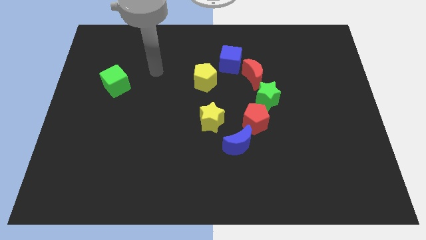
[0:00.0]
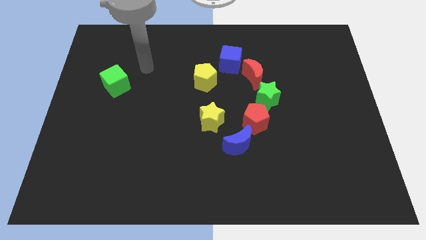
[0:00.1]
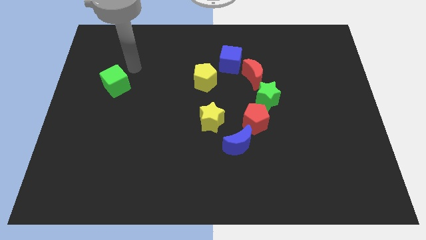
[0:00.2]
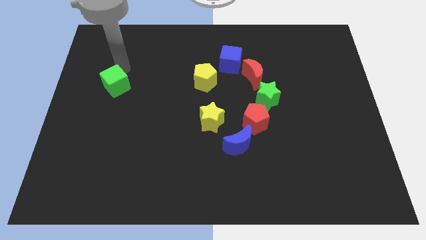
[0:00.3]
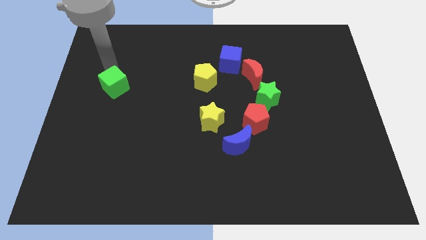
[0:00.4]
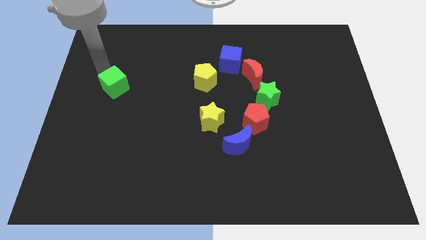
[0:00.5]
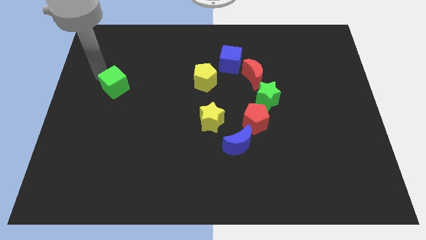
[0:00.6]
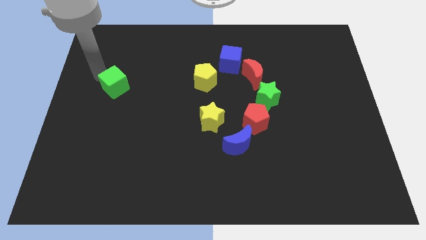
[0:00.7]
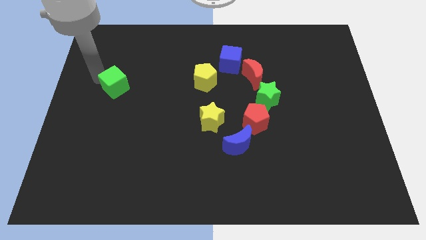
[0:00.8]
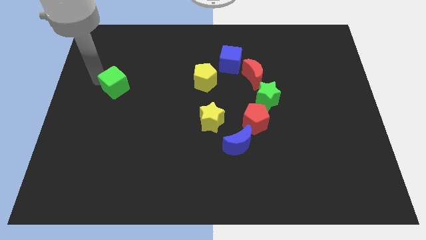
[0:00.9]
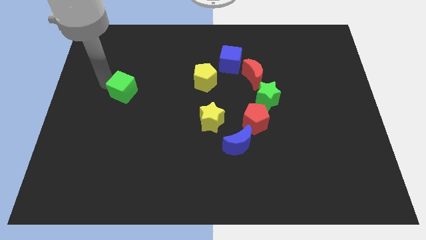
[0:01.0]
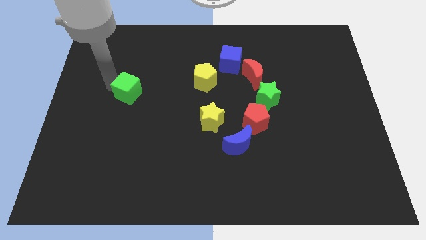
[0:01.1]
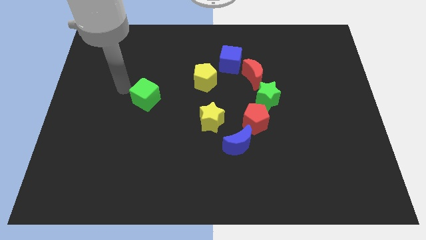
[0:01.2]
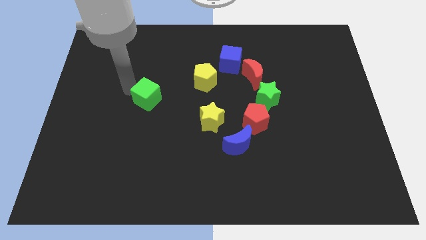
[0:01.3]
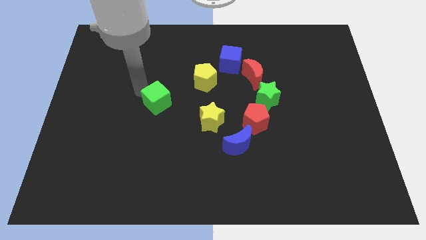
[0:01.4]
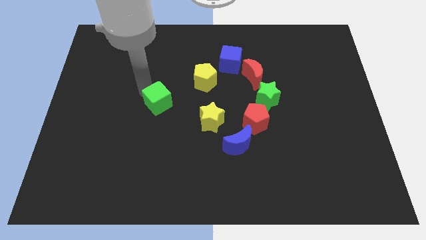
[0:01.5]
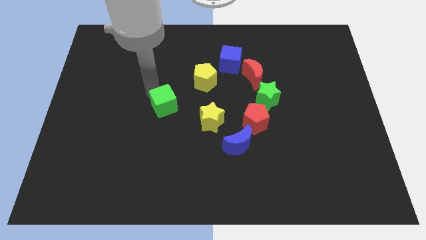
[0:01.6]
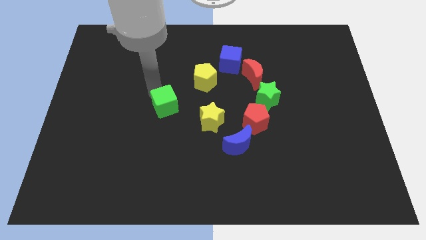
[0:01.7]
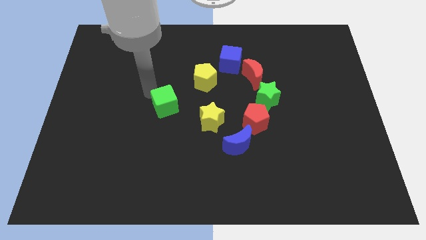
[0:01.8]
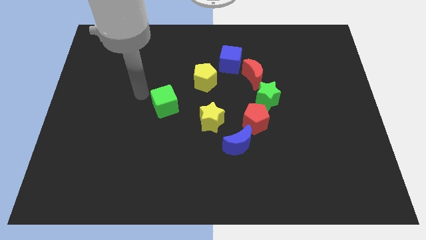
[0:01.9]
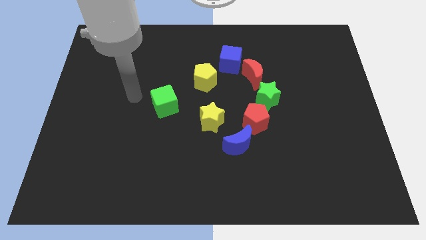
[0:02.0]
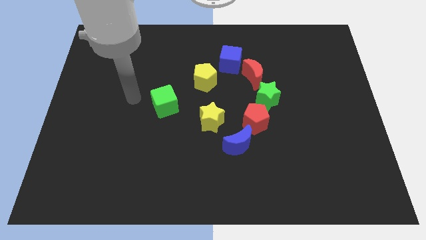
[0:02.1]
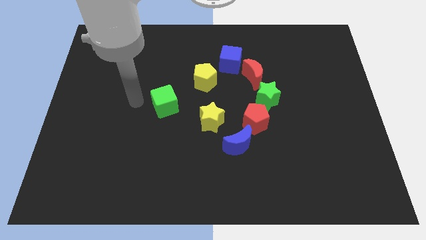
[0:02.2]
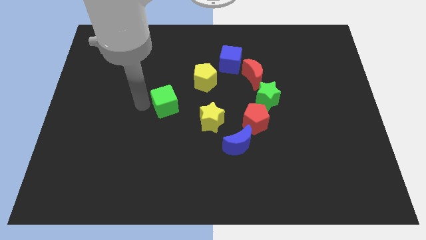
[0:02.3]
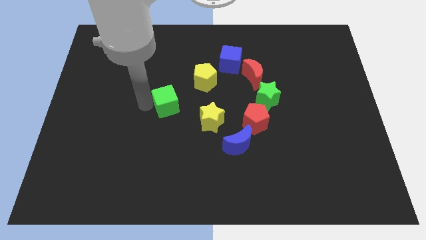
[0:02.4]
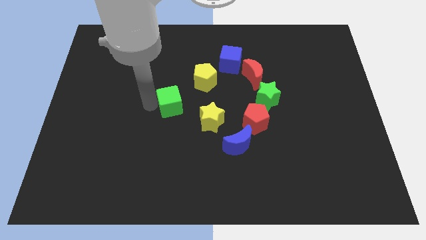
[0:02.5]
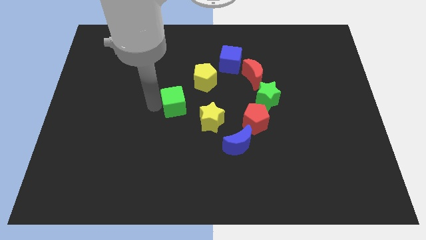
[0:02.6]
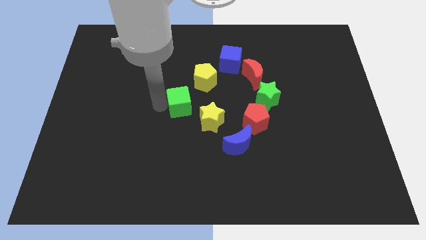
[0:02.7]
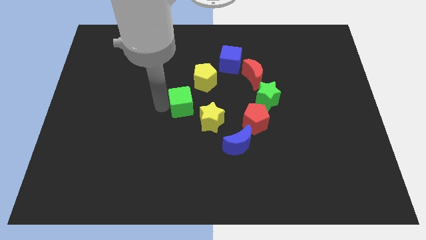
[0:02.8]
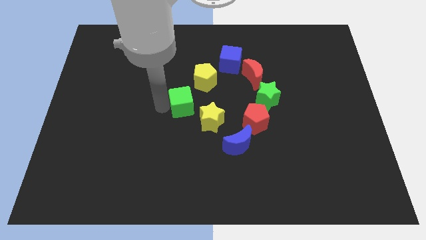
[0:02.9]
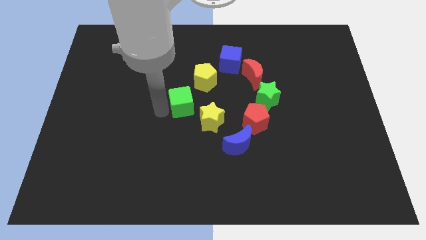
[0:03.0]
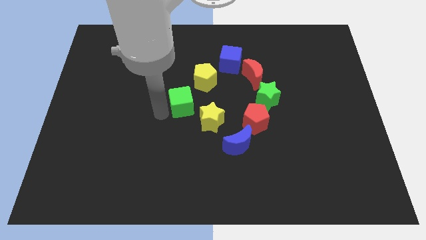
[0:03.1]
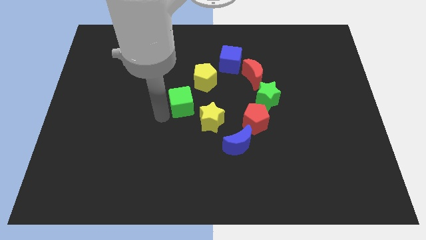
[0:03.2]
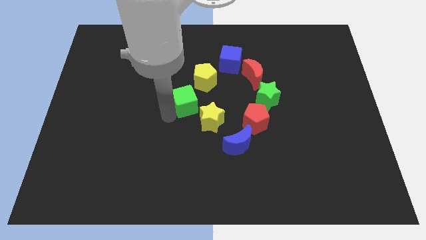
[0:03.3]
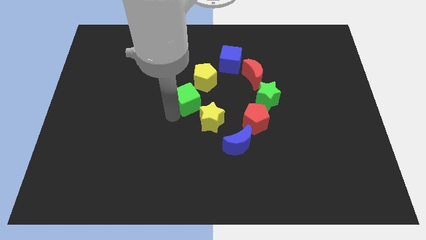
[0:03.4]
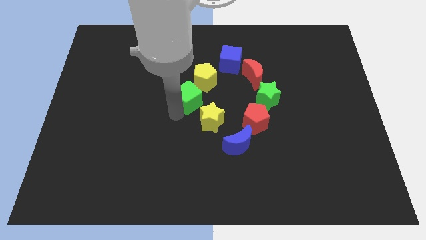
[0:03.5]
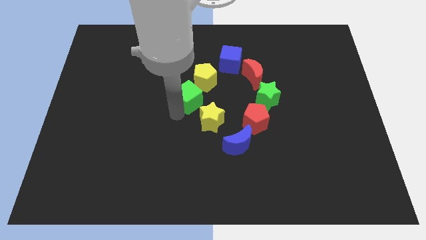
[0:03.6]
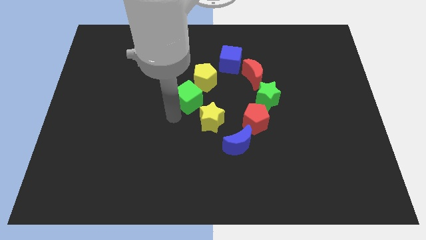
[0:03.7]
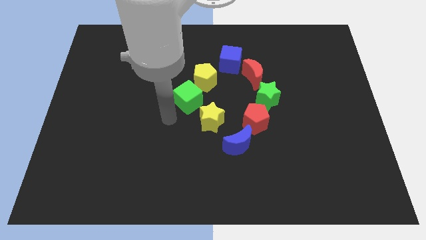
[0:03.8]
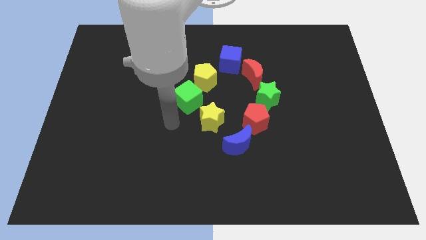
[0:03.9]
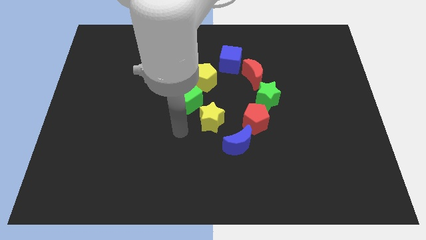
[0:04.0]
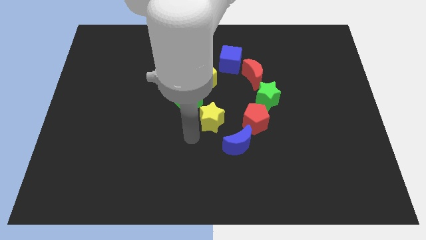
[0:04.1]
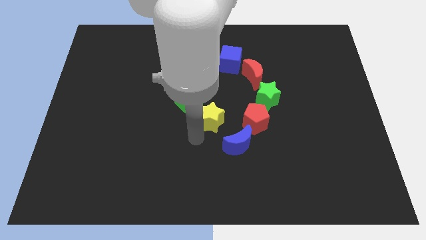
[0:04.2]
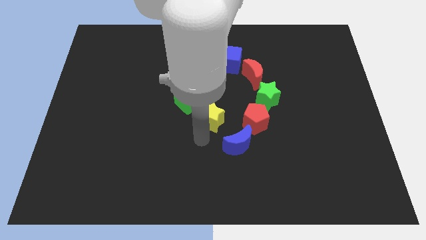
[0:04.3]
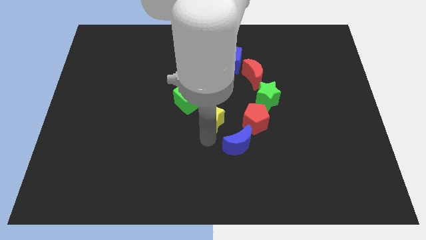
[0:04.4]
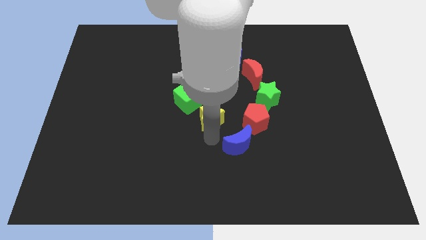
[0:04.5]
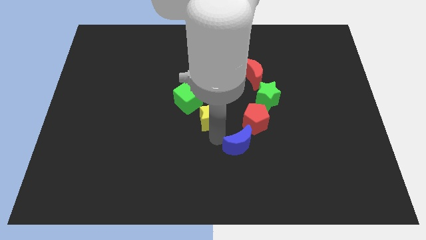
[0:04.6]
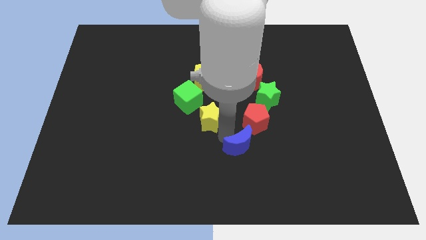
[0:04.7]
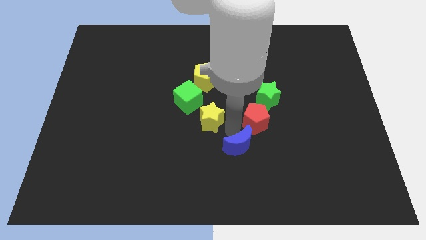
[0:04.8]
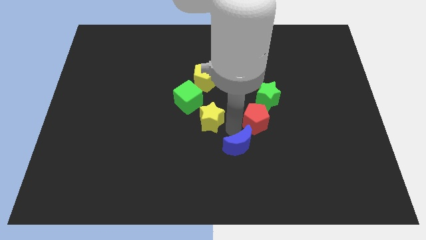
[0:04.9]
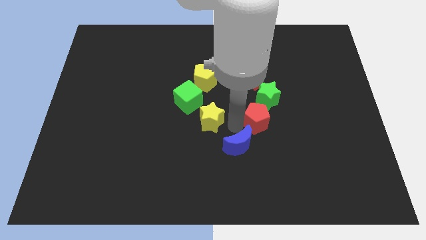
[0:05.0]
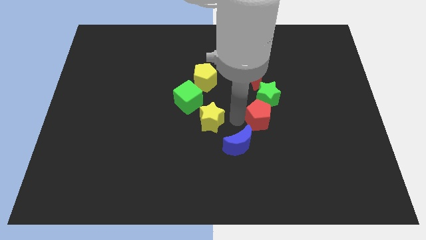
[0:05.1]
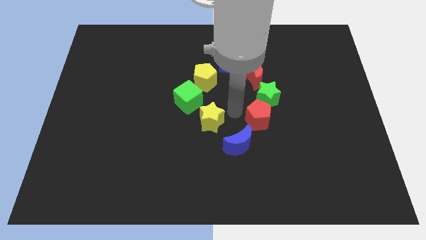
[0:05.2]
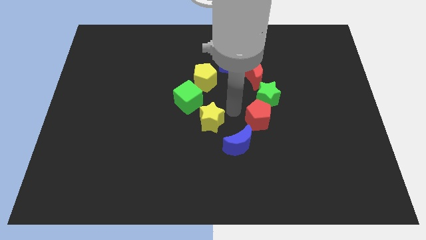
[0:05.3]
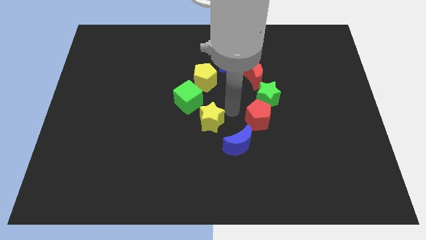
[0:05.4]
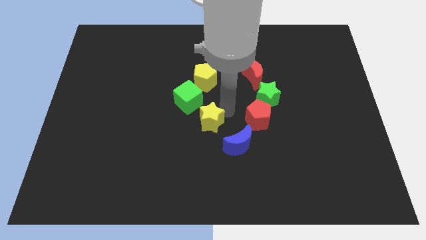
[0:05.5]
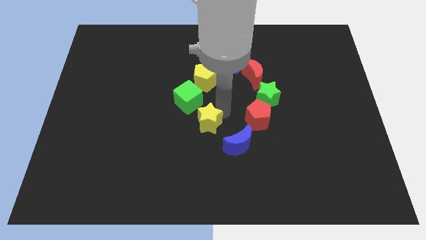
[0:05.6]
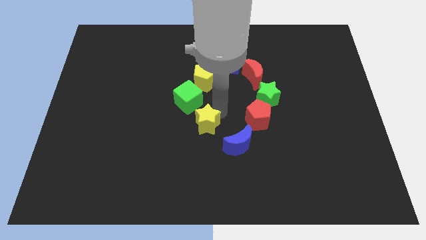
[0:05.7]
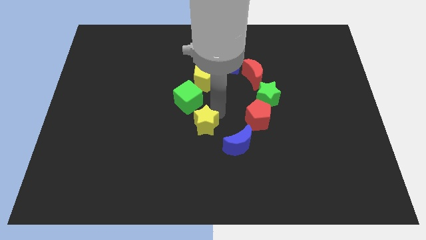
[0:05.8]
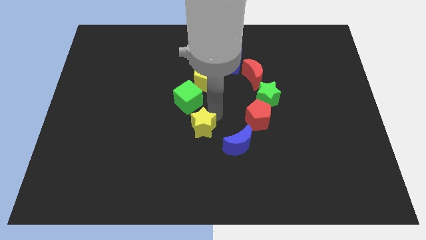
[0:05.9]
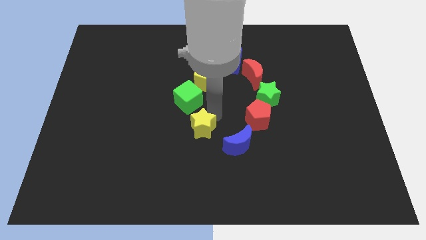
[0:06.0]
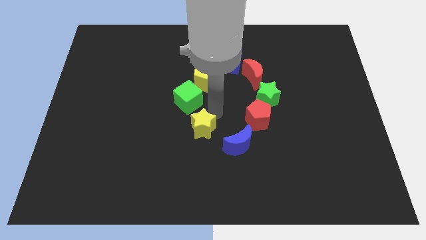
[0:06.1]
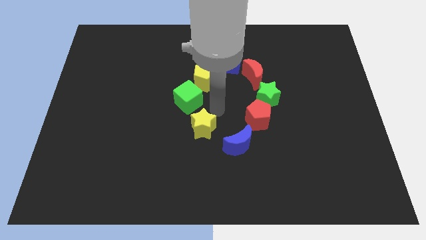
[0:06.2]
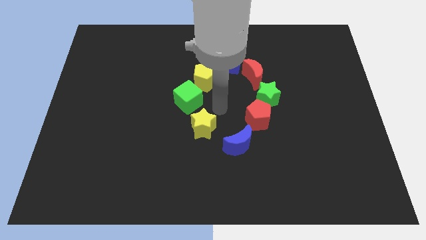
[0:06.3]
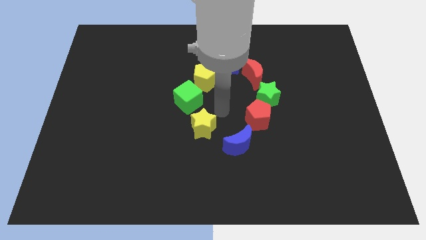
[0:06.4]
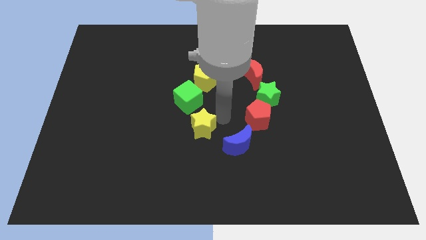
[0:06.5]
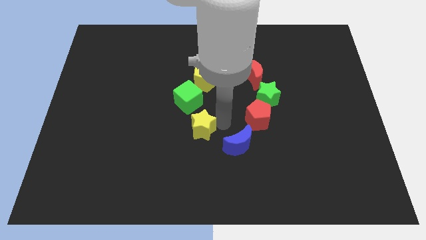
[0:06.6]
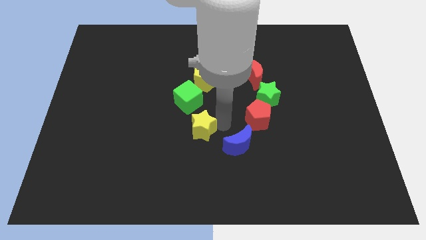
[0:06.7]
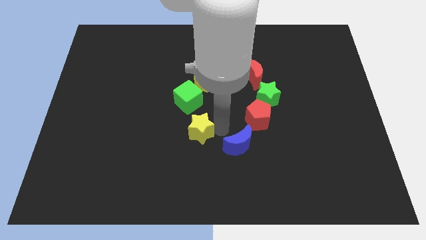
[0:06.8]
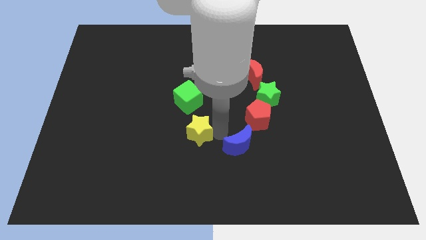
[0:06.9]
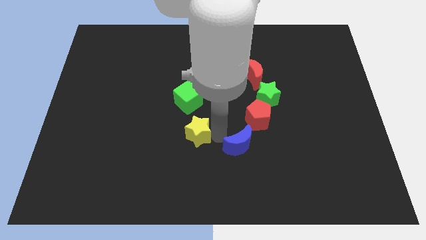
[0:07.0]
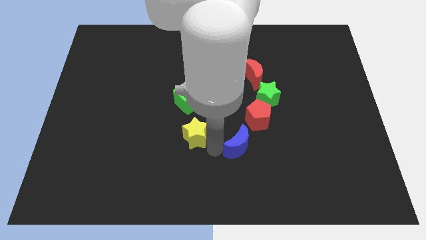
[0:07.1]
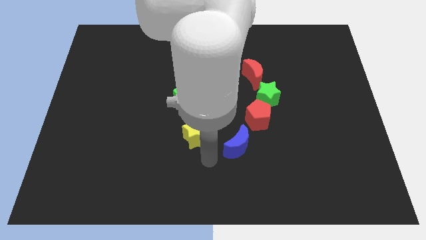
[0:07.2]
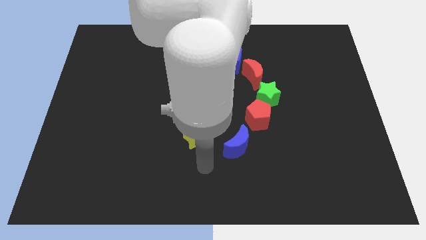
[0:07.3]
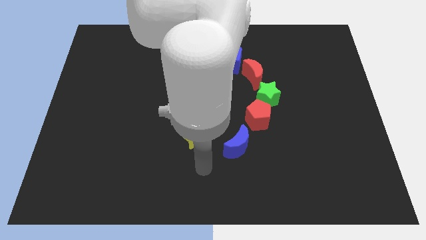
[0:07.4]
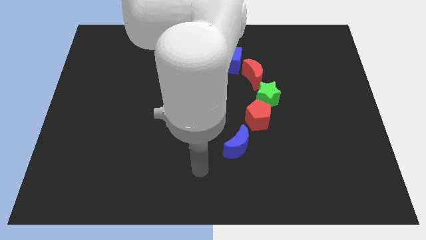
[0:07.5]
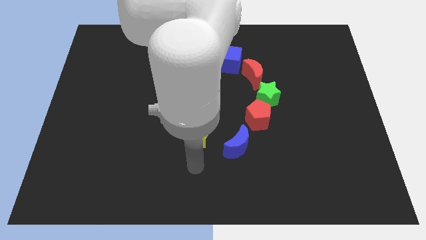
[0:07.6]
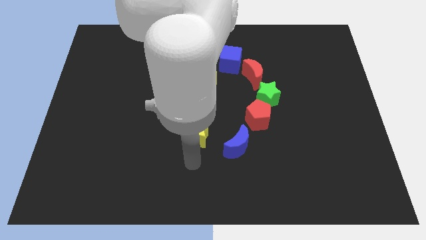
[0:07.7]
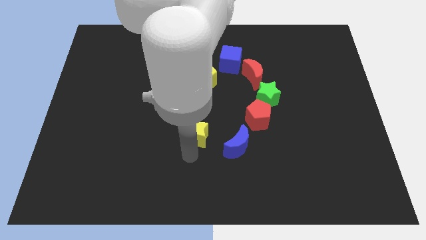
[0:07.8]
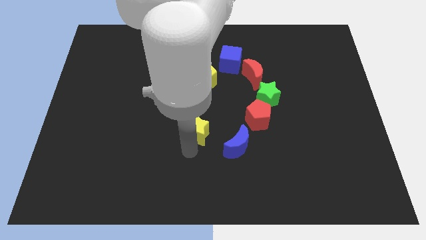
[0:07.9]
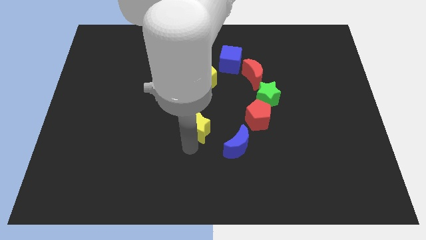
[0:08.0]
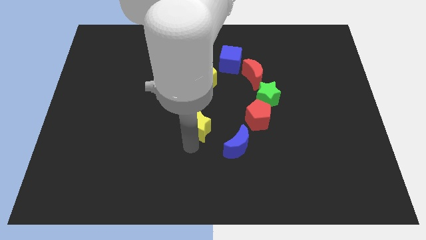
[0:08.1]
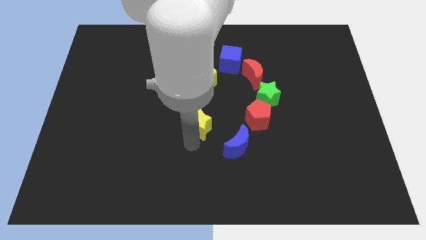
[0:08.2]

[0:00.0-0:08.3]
place the green cube towards the yellow blocks

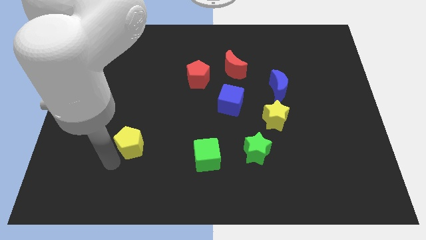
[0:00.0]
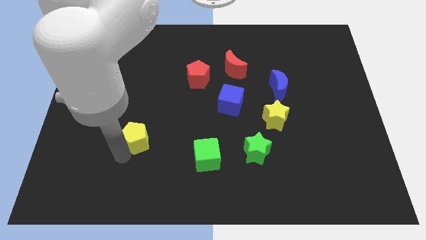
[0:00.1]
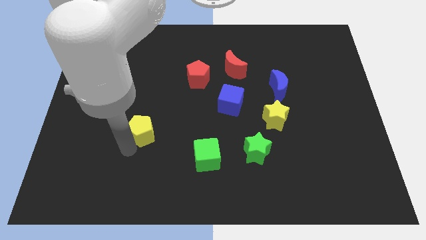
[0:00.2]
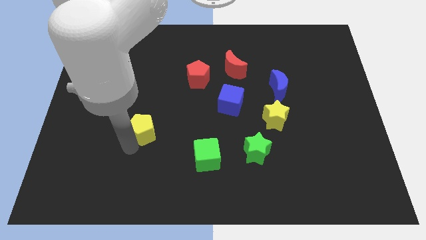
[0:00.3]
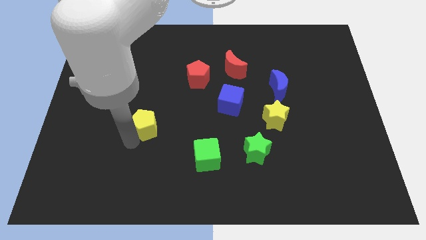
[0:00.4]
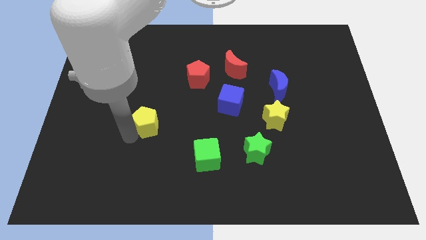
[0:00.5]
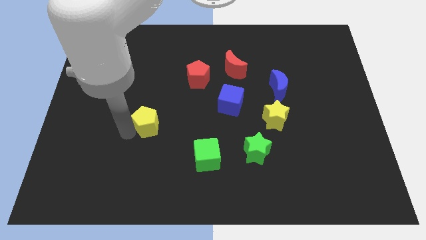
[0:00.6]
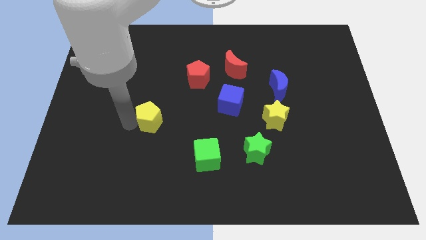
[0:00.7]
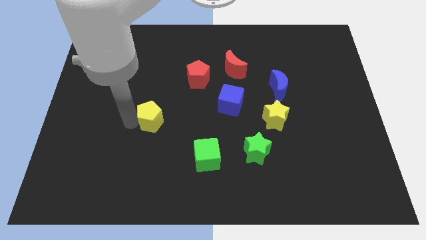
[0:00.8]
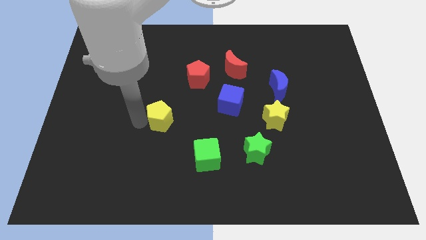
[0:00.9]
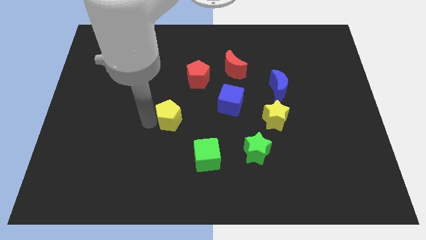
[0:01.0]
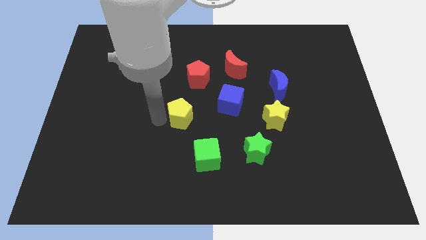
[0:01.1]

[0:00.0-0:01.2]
move the yellow pentagon between two blocks to make a circle
